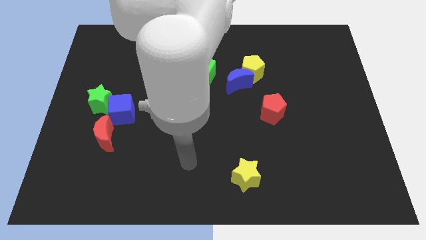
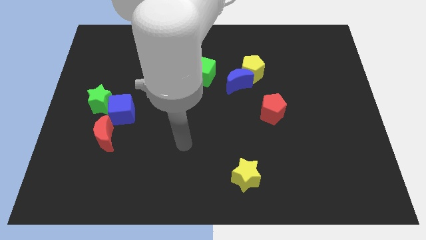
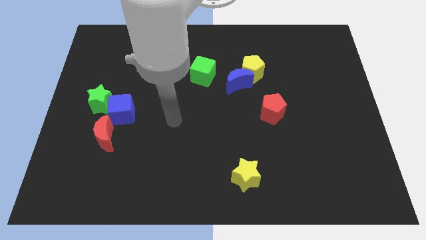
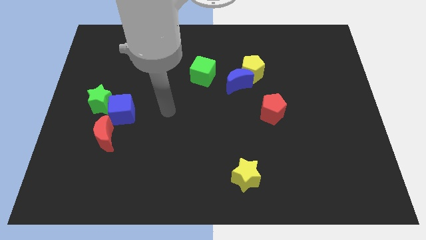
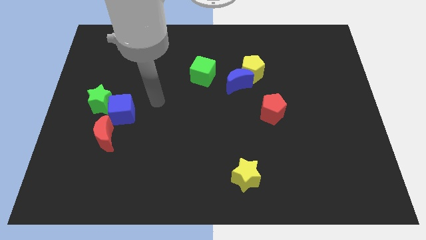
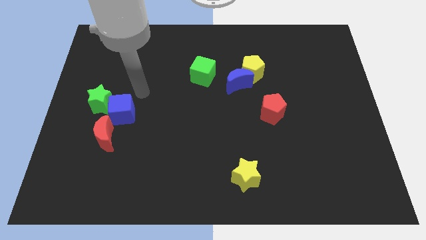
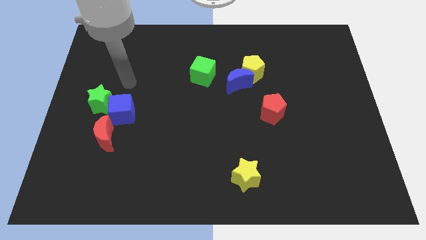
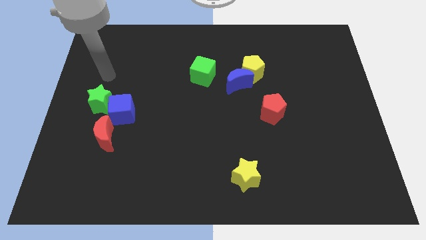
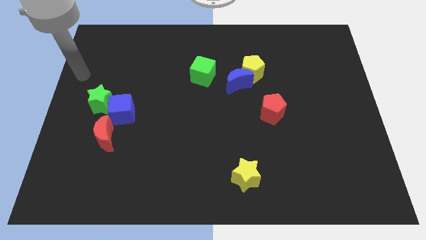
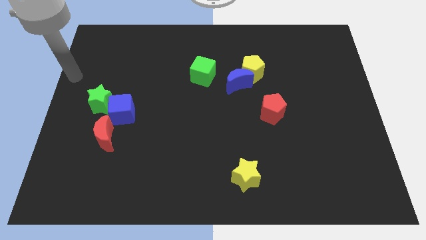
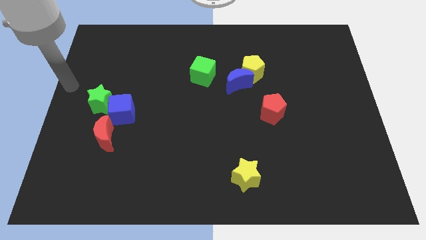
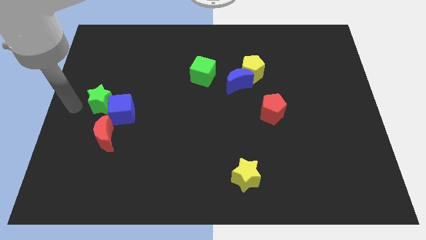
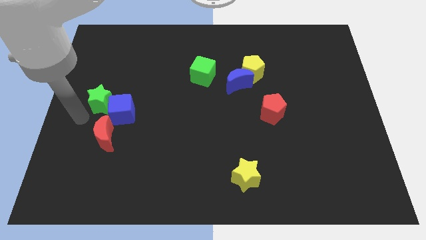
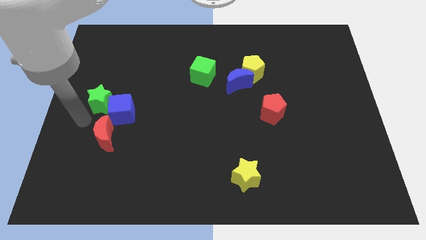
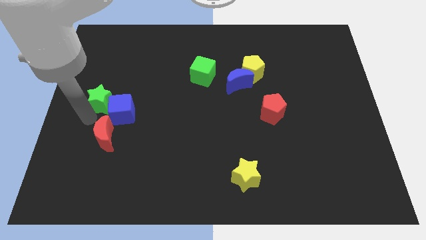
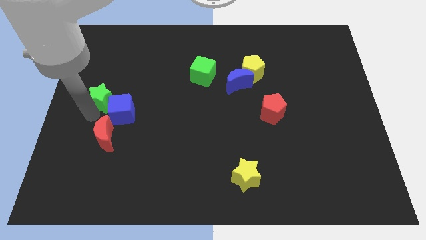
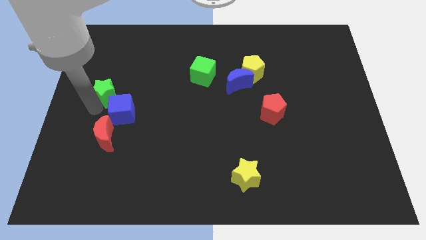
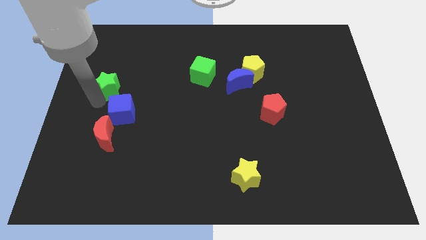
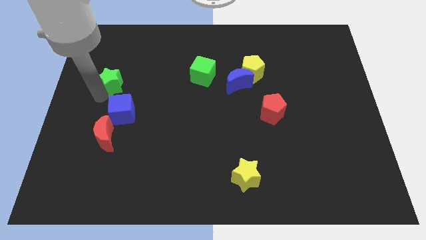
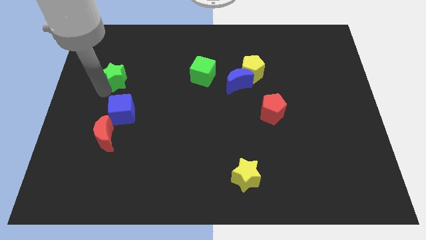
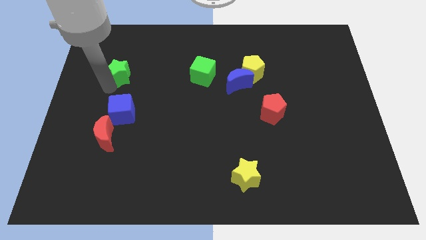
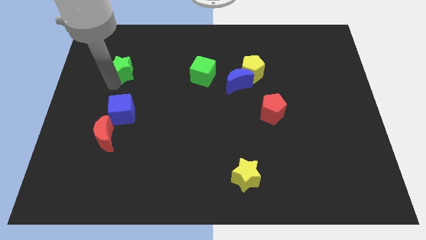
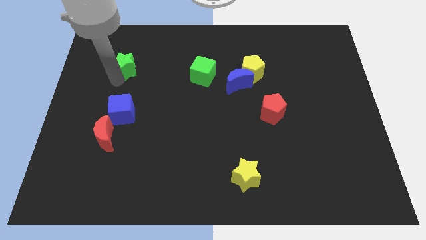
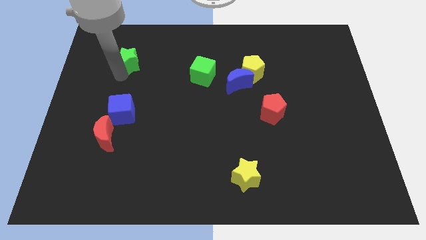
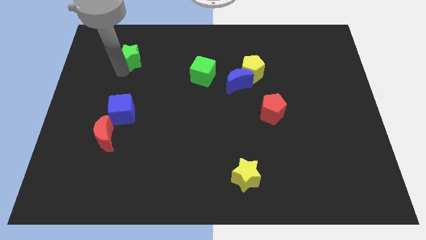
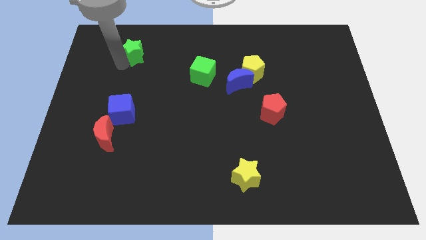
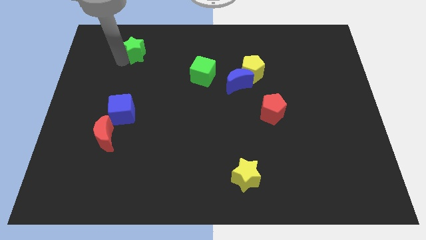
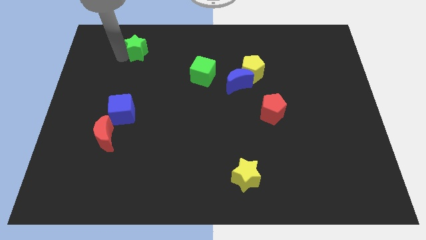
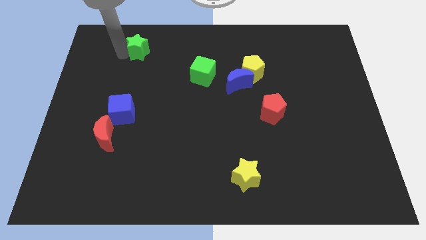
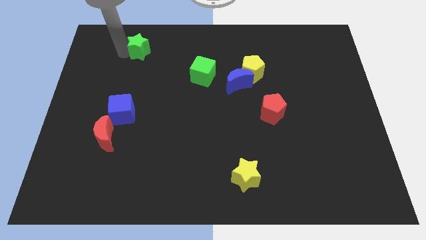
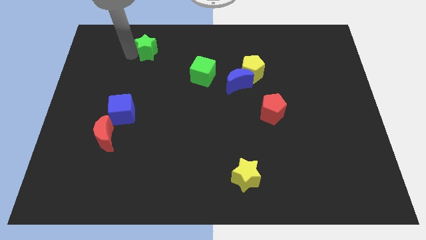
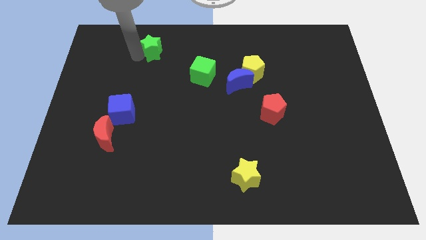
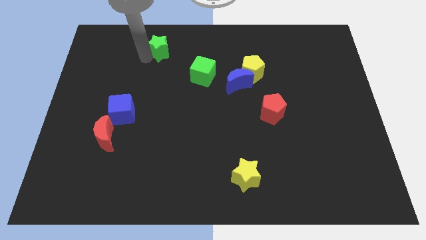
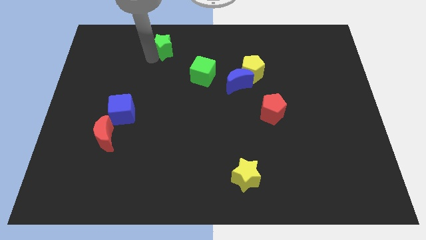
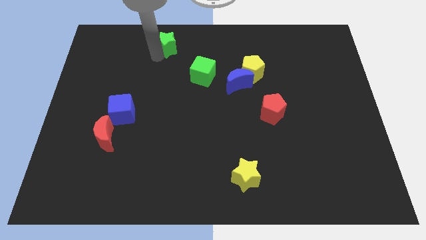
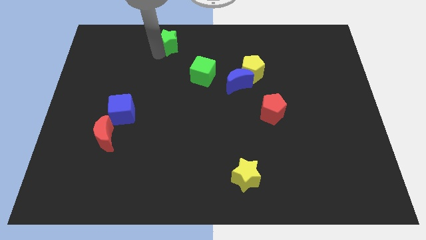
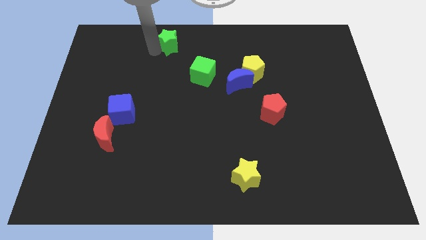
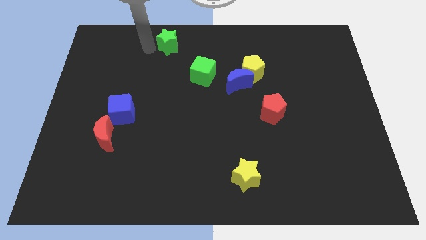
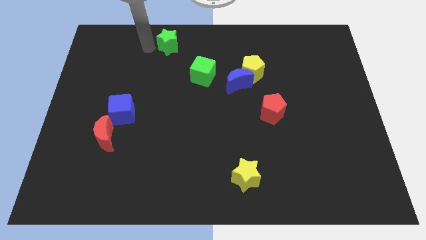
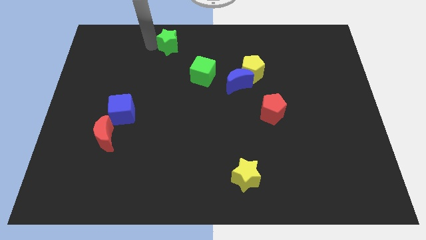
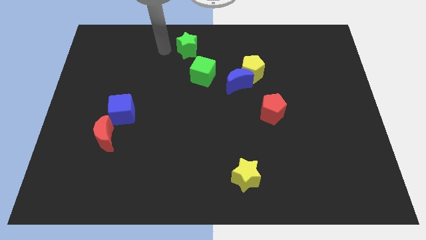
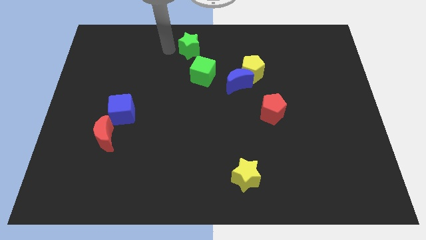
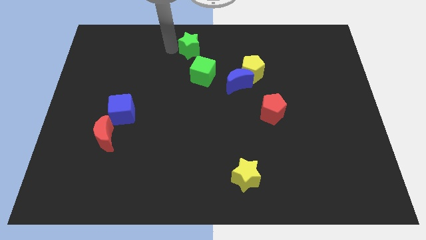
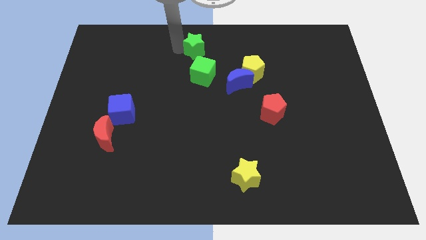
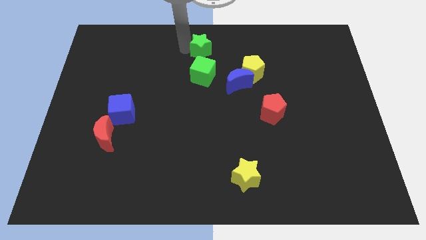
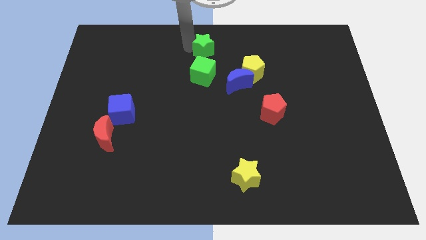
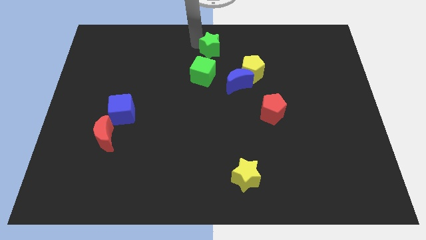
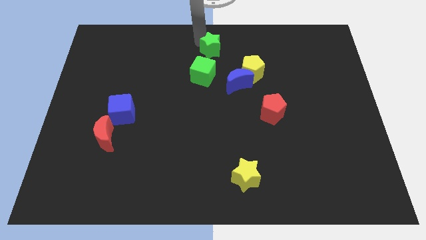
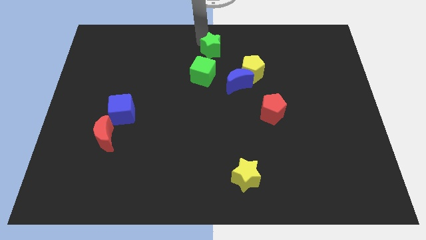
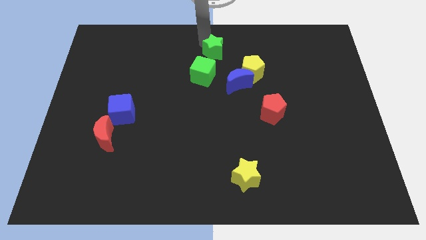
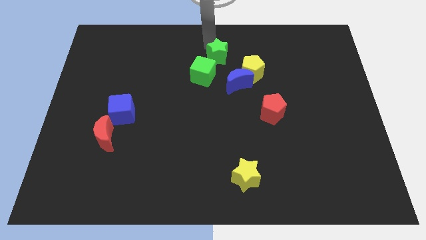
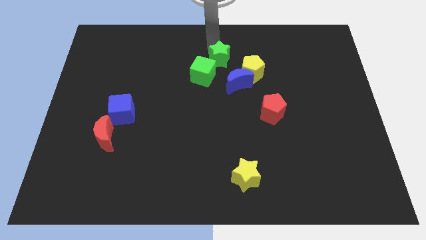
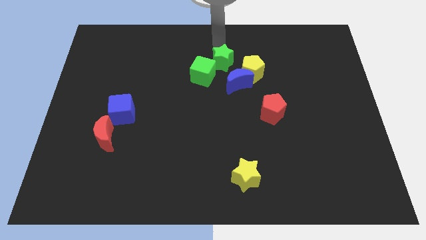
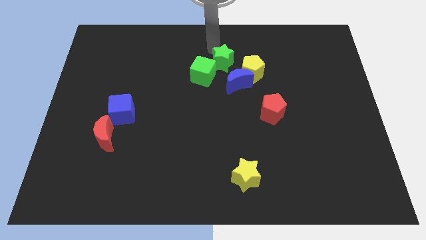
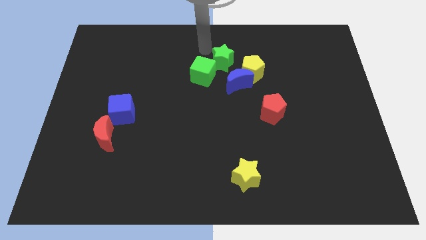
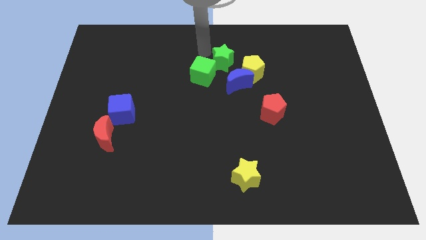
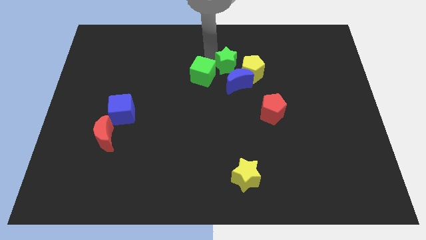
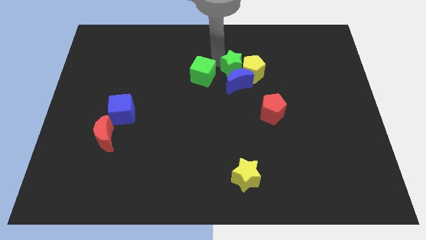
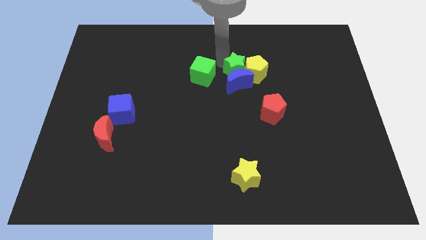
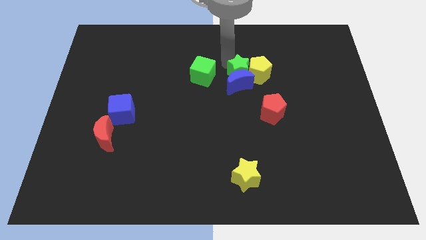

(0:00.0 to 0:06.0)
put the green star close to the yellow pentagon

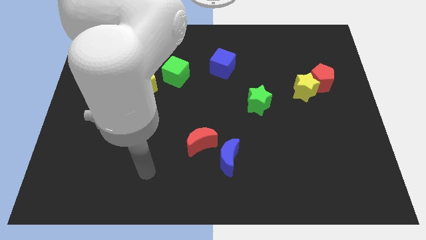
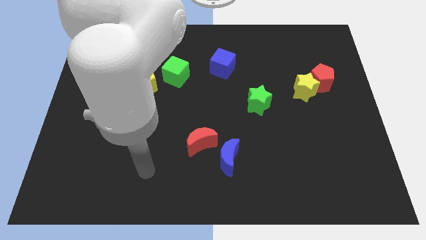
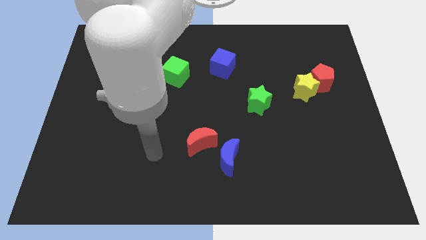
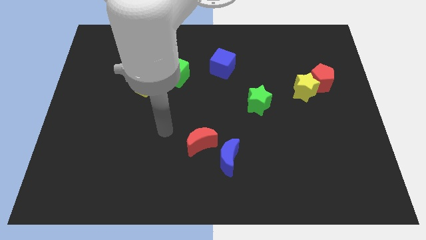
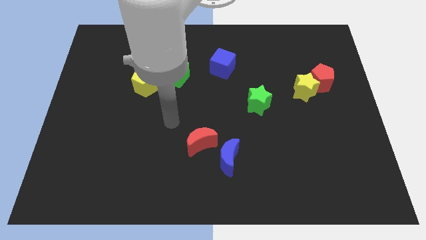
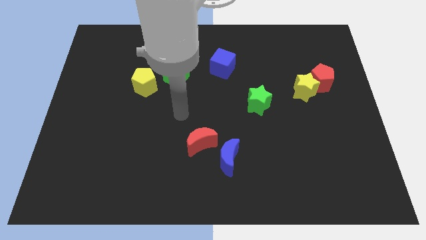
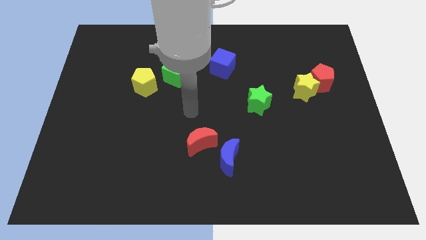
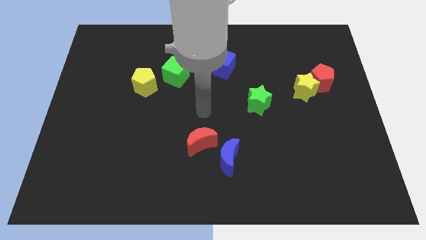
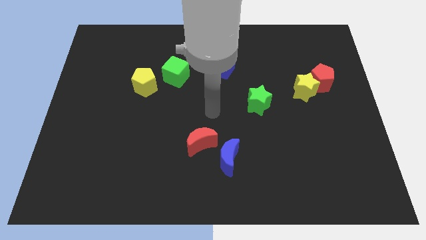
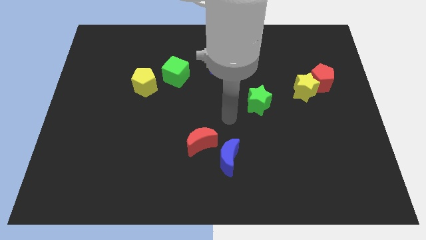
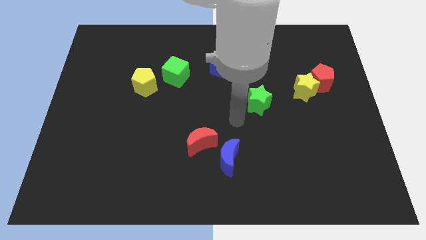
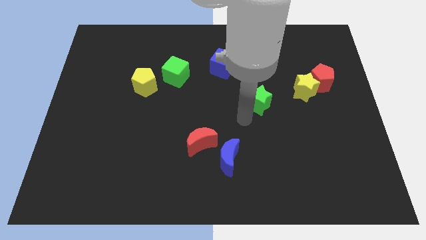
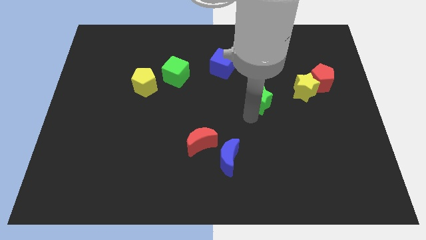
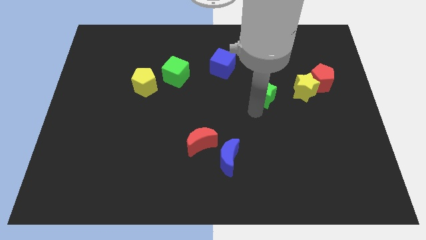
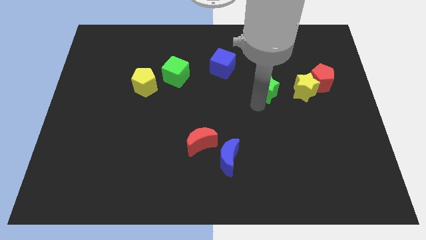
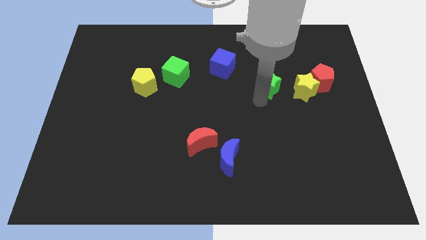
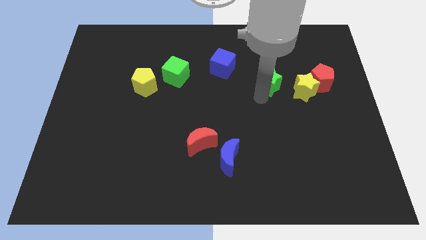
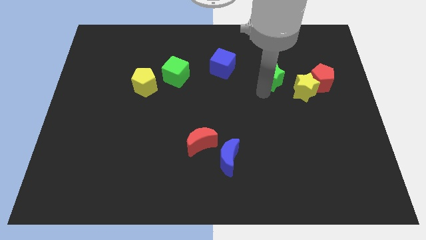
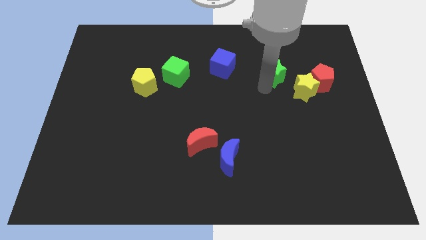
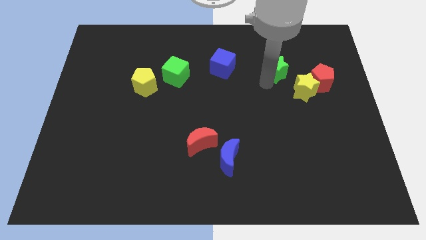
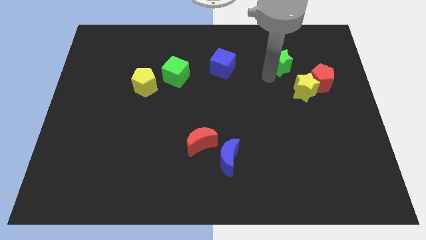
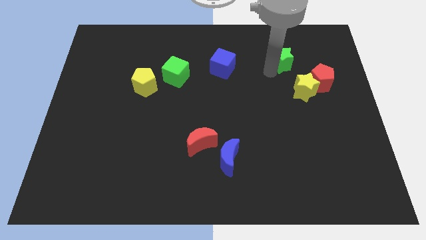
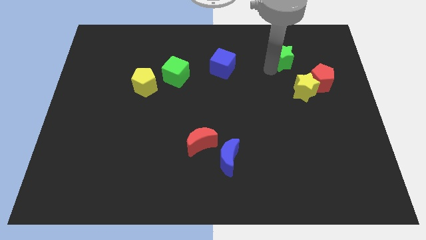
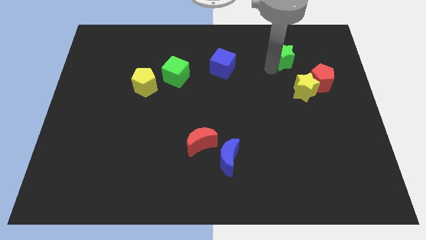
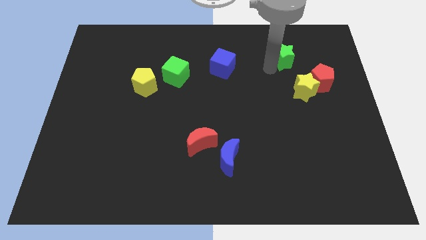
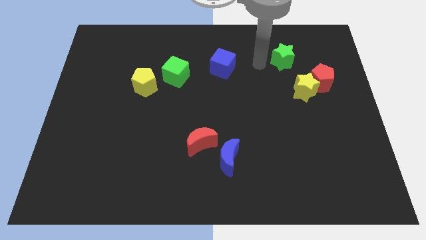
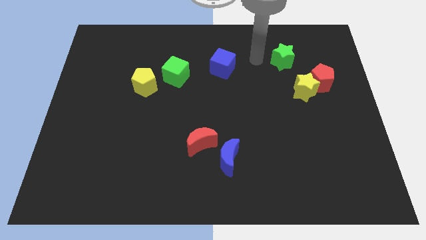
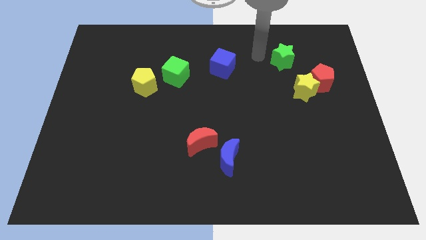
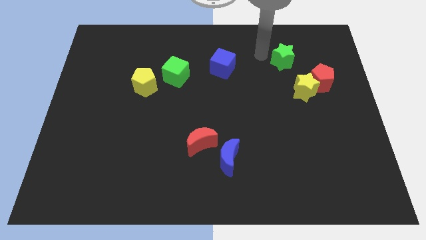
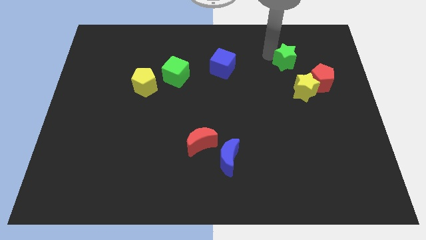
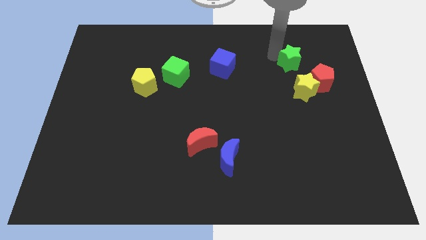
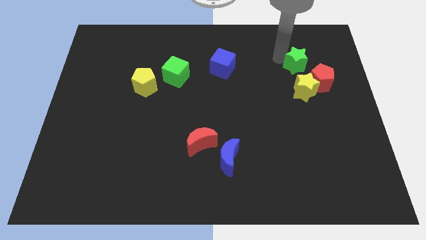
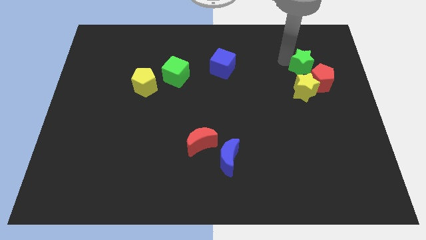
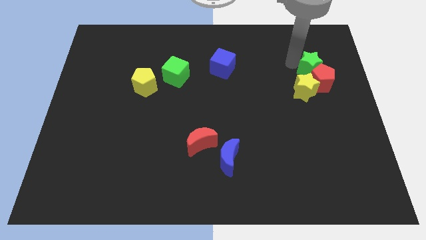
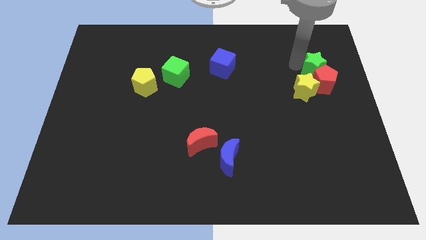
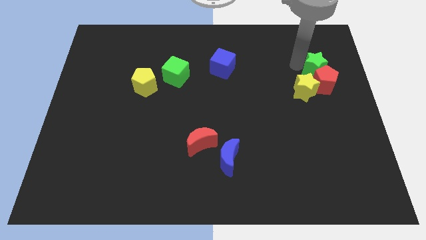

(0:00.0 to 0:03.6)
move the green star close to the red pentagon
